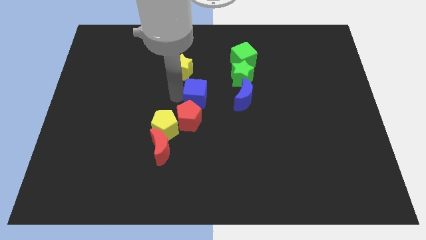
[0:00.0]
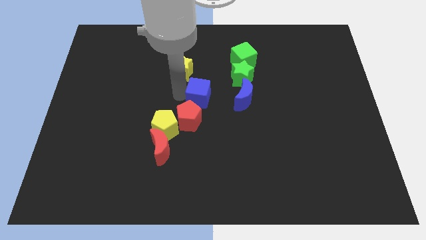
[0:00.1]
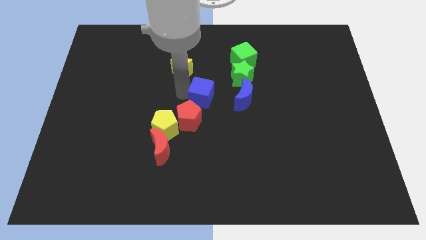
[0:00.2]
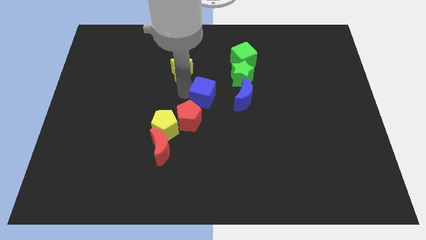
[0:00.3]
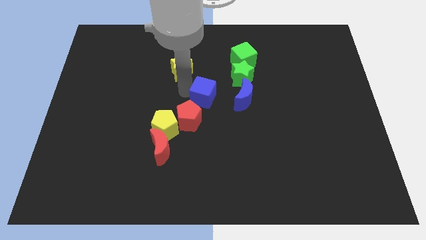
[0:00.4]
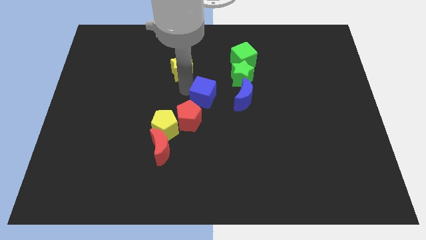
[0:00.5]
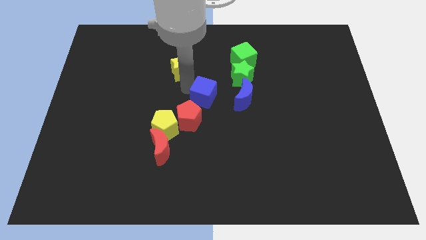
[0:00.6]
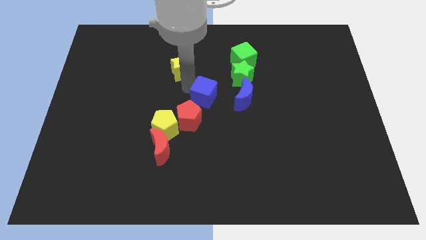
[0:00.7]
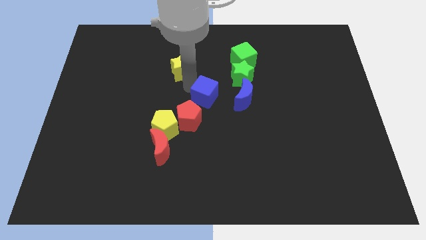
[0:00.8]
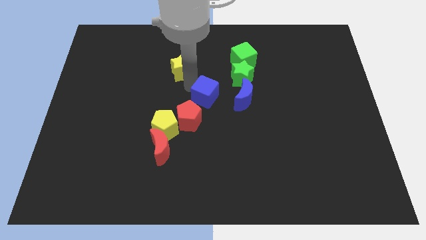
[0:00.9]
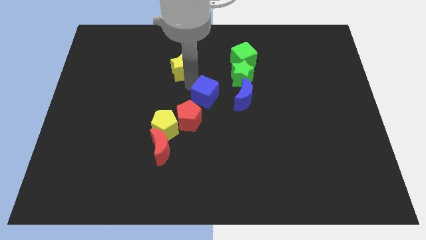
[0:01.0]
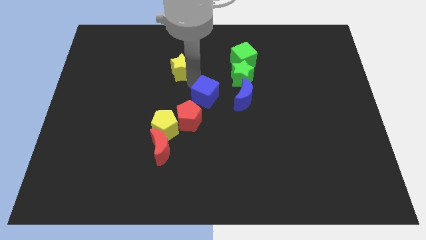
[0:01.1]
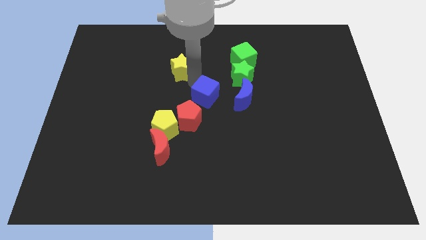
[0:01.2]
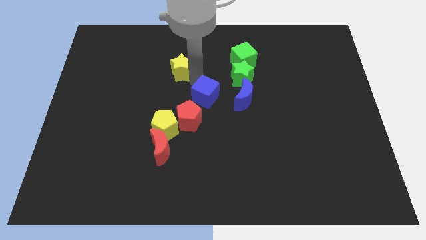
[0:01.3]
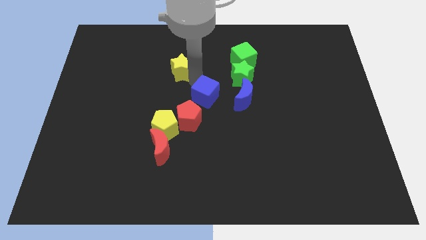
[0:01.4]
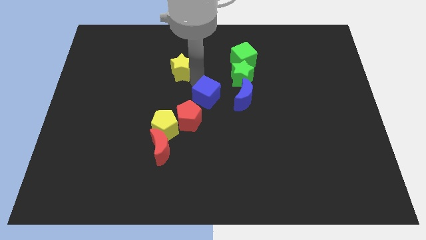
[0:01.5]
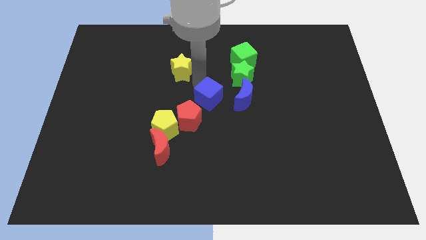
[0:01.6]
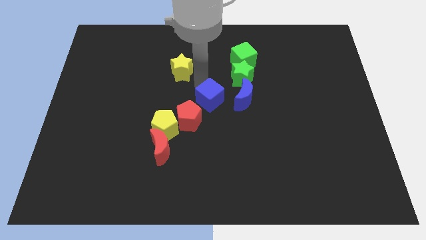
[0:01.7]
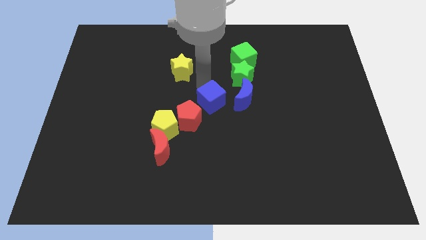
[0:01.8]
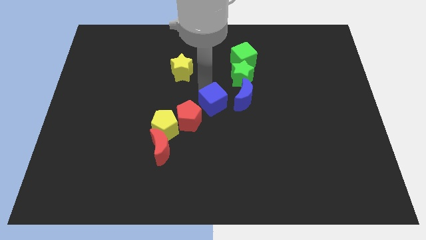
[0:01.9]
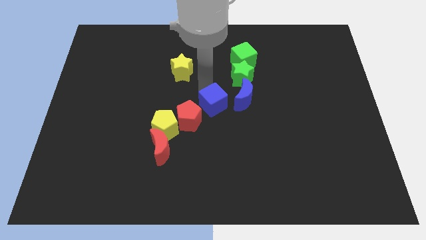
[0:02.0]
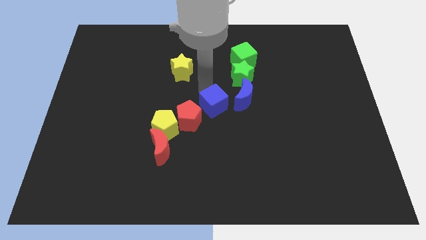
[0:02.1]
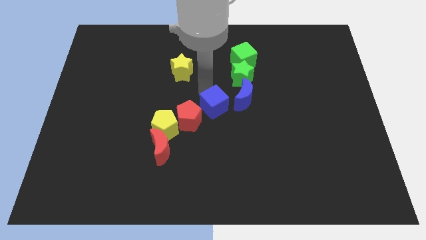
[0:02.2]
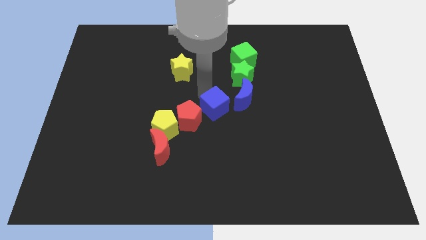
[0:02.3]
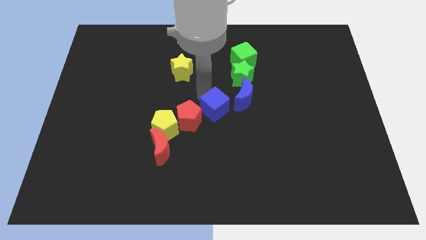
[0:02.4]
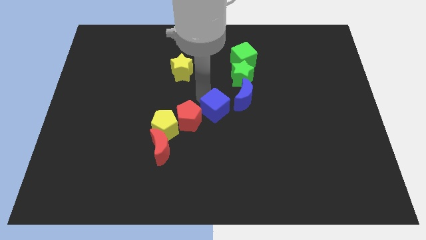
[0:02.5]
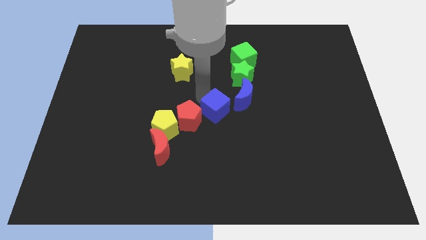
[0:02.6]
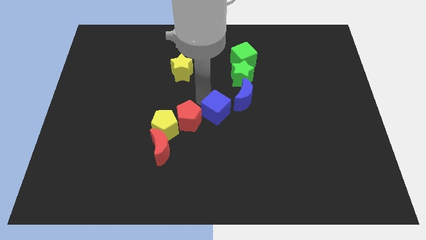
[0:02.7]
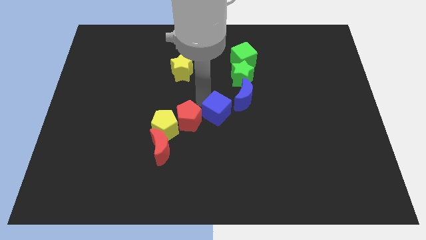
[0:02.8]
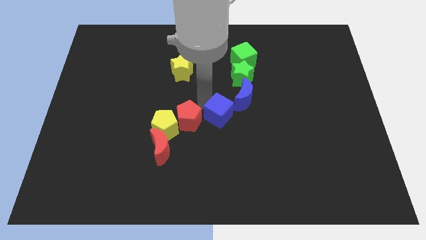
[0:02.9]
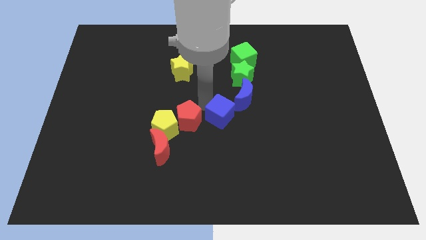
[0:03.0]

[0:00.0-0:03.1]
place the blue cube in between the red pentagon and the blue crescent

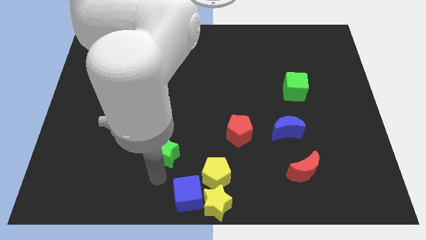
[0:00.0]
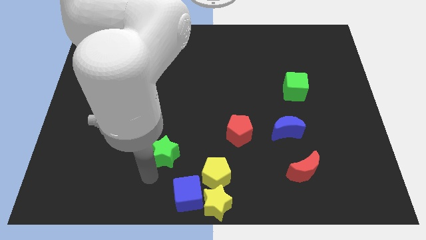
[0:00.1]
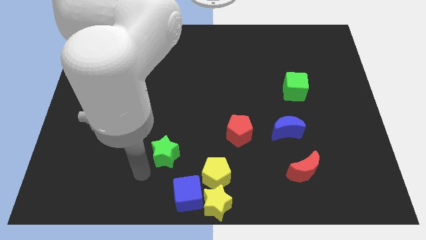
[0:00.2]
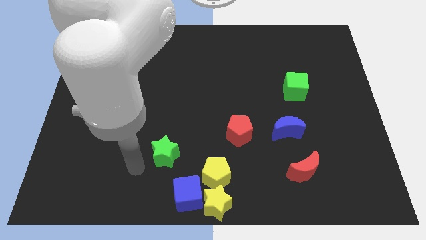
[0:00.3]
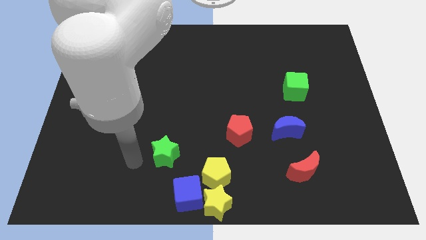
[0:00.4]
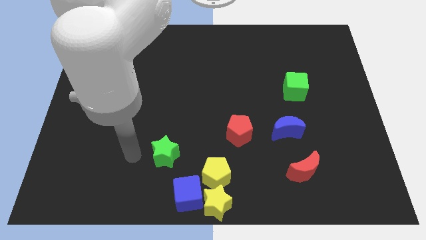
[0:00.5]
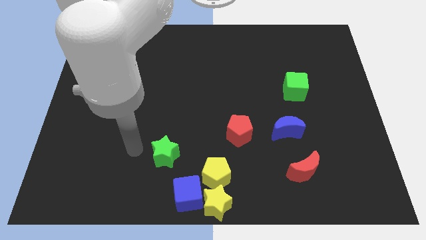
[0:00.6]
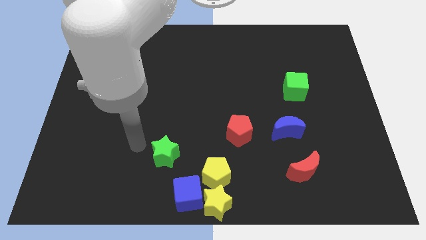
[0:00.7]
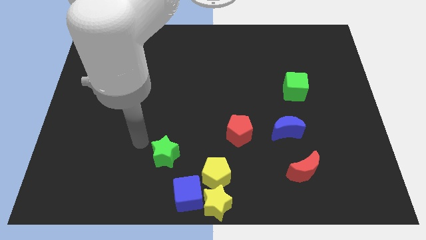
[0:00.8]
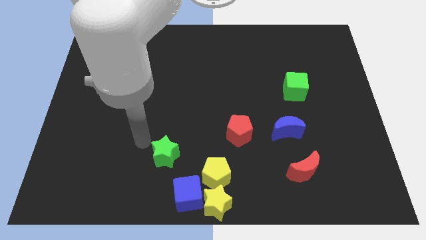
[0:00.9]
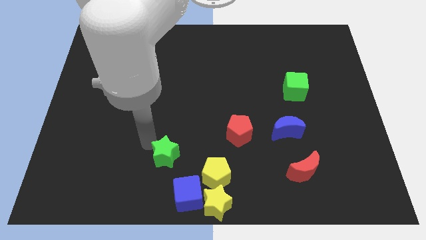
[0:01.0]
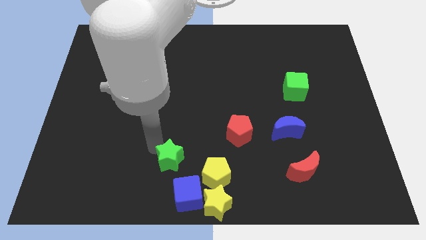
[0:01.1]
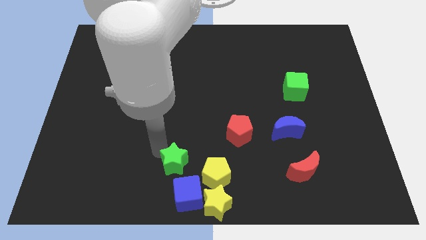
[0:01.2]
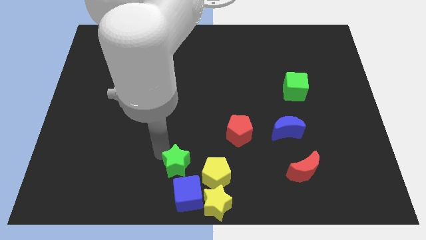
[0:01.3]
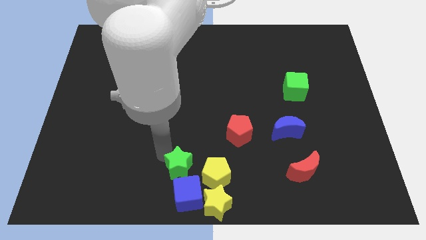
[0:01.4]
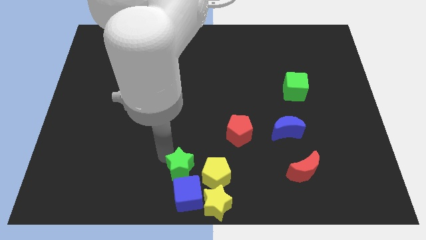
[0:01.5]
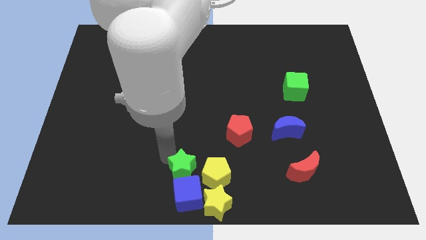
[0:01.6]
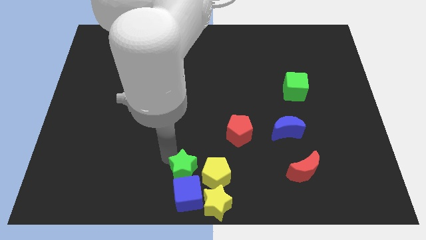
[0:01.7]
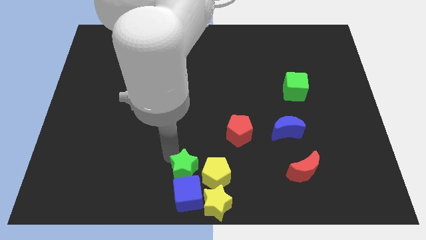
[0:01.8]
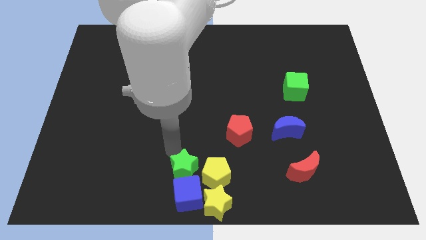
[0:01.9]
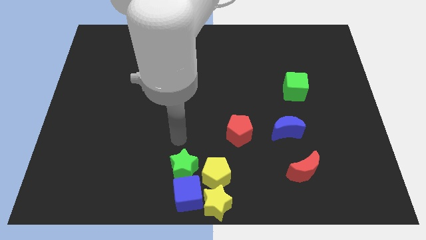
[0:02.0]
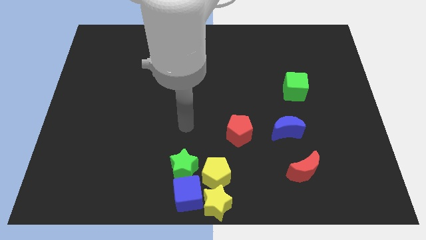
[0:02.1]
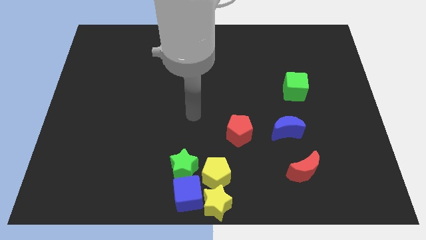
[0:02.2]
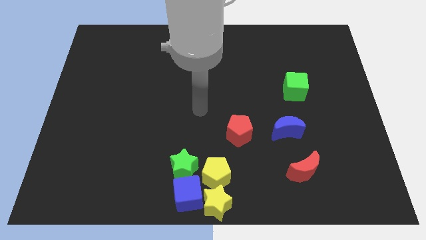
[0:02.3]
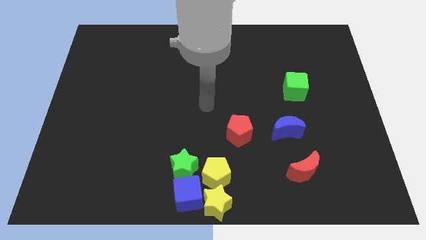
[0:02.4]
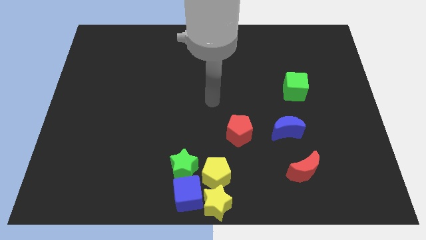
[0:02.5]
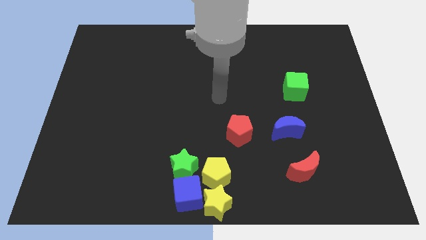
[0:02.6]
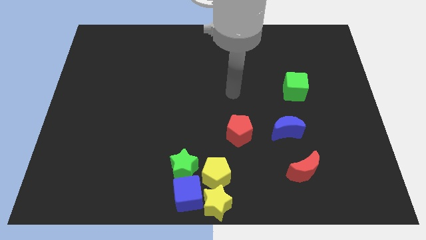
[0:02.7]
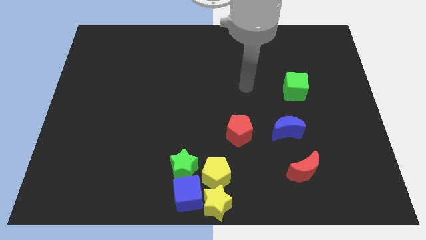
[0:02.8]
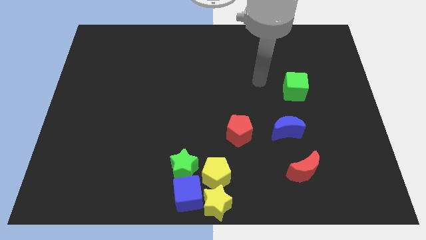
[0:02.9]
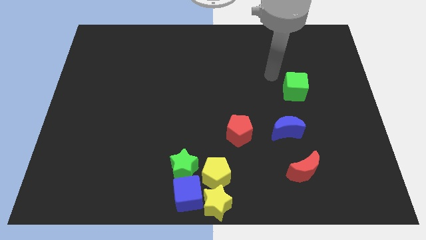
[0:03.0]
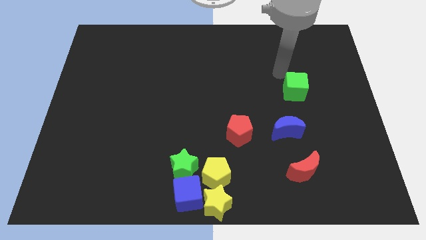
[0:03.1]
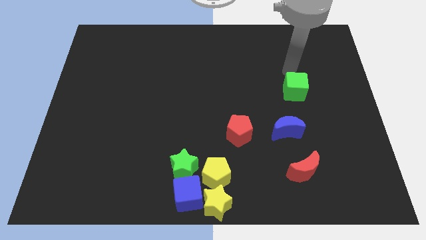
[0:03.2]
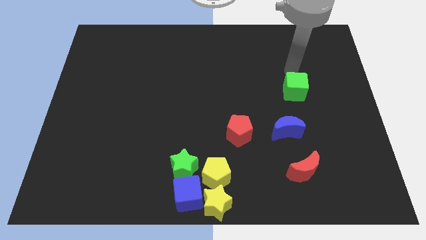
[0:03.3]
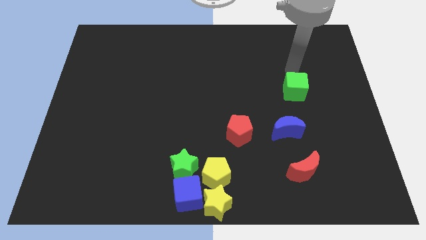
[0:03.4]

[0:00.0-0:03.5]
place the green star left to the yellow pentagon

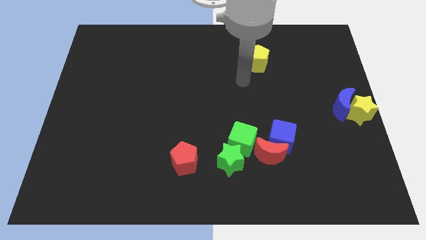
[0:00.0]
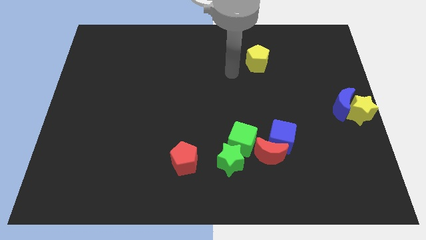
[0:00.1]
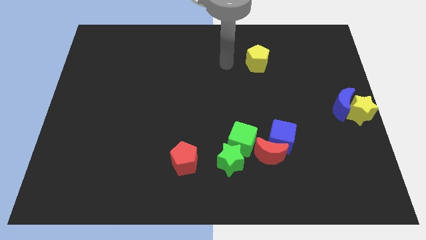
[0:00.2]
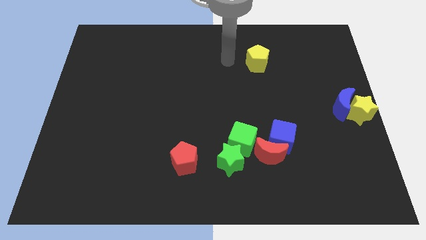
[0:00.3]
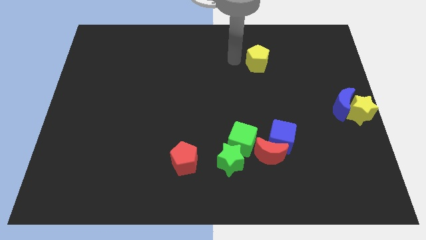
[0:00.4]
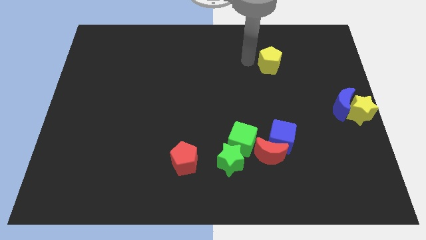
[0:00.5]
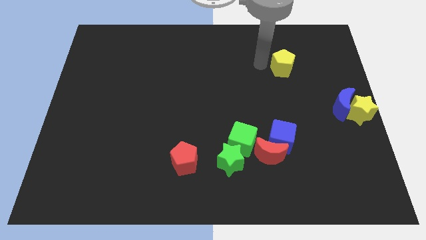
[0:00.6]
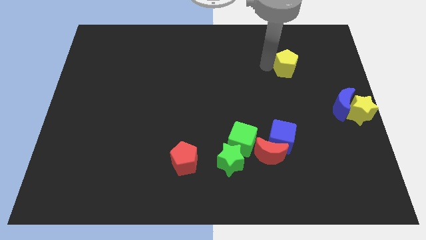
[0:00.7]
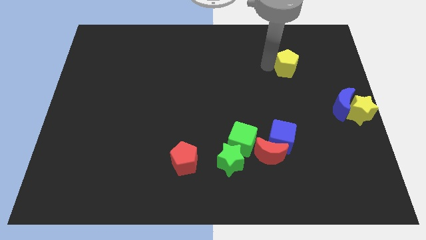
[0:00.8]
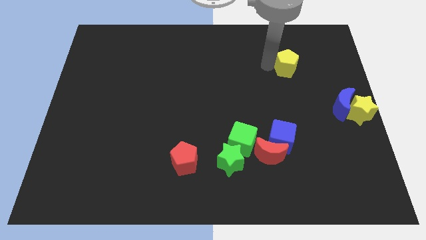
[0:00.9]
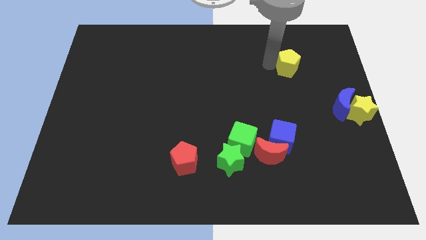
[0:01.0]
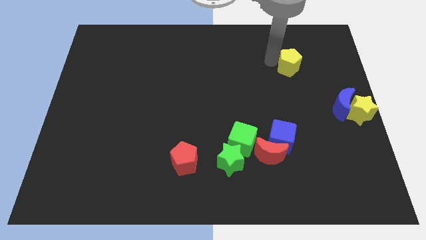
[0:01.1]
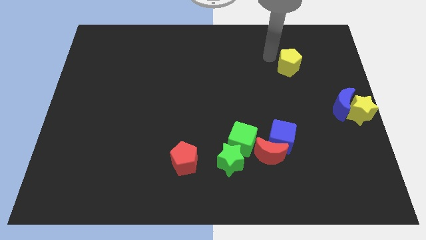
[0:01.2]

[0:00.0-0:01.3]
slightly move the yellow pentagon right to the board

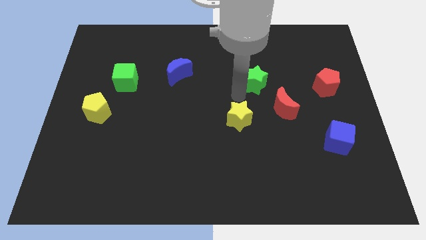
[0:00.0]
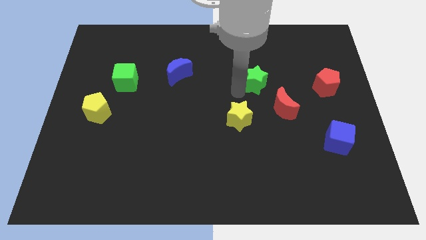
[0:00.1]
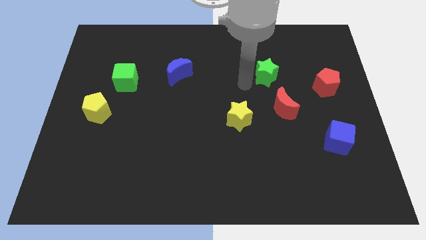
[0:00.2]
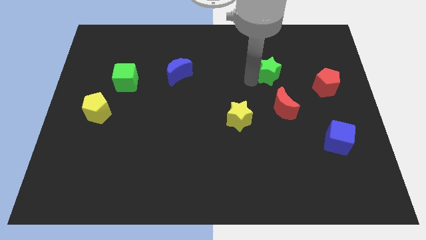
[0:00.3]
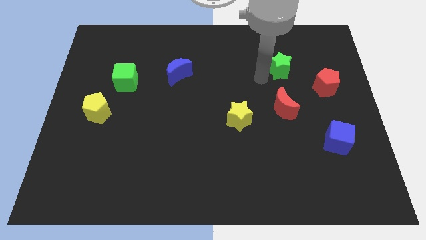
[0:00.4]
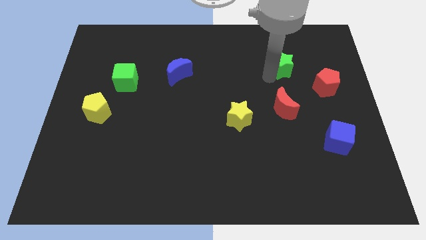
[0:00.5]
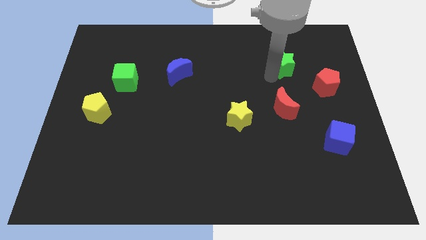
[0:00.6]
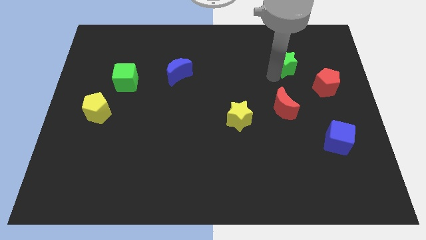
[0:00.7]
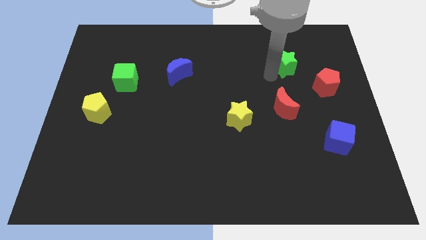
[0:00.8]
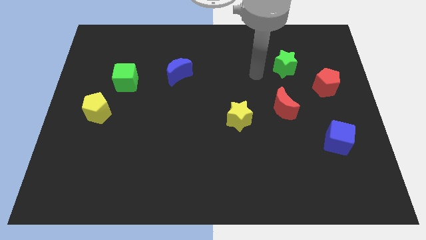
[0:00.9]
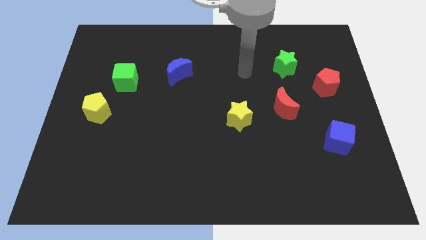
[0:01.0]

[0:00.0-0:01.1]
push the green star to the top side of the red moon

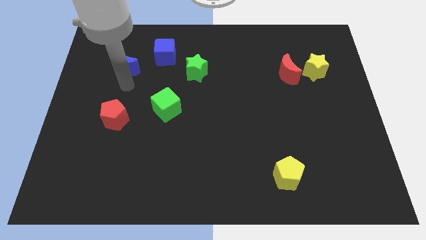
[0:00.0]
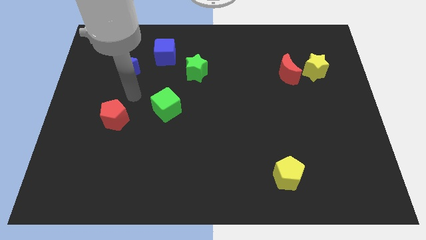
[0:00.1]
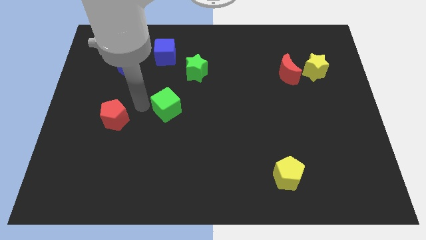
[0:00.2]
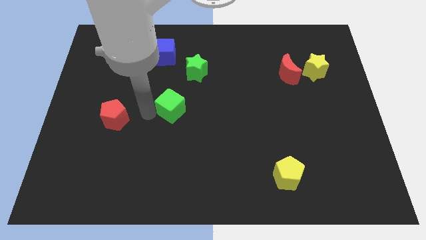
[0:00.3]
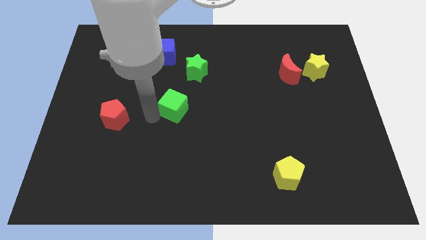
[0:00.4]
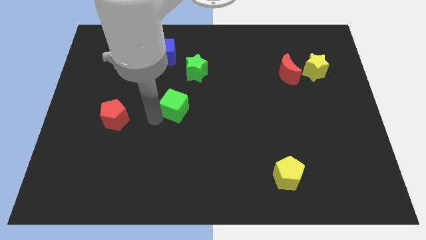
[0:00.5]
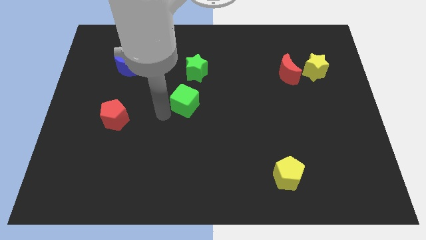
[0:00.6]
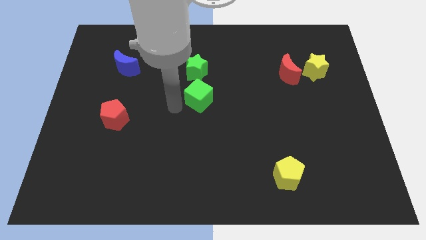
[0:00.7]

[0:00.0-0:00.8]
place the green cube vertical to the green star
